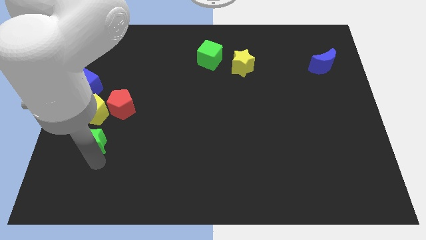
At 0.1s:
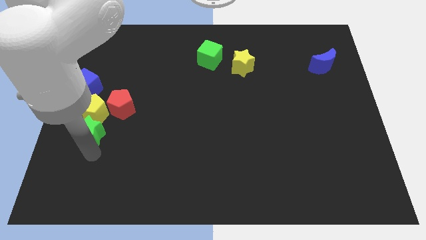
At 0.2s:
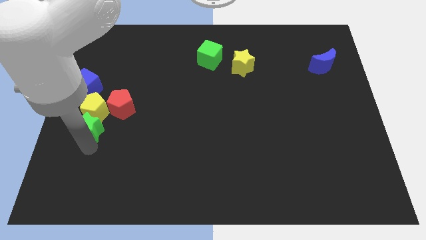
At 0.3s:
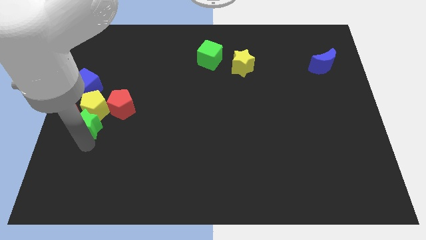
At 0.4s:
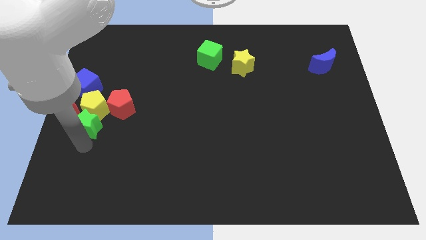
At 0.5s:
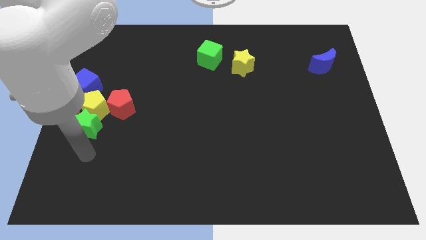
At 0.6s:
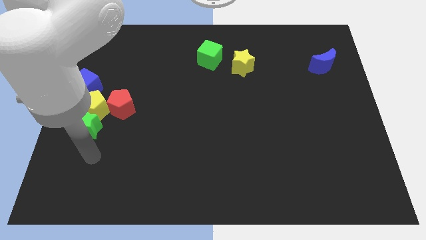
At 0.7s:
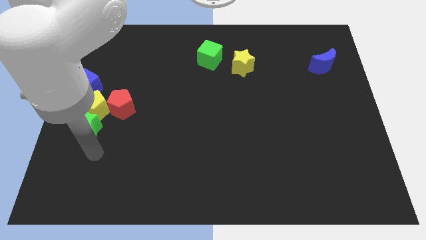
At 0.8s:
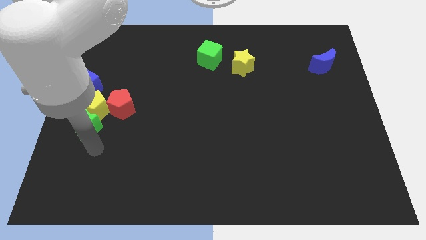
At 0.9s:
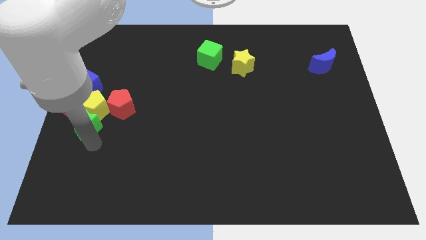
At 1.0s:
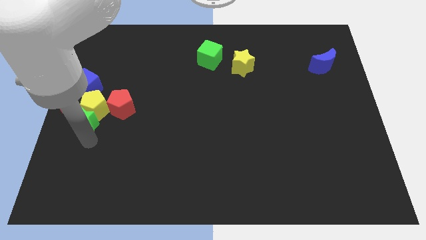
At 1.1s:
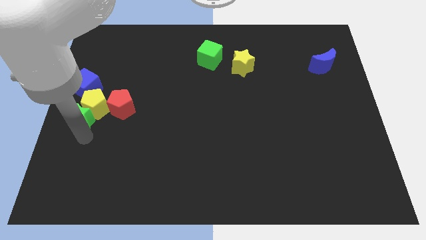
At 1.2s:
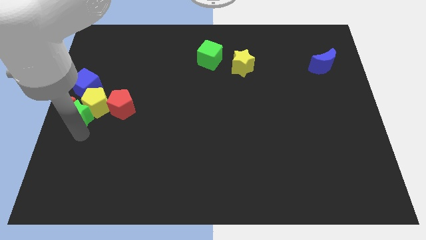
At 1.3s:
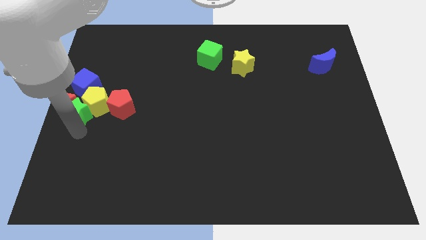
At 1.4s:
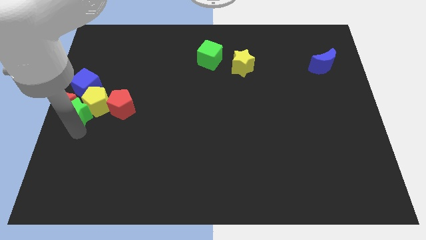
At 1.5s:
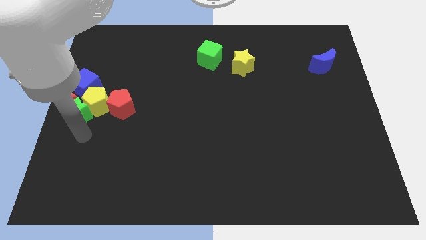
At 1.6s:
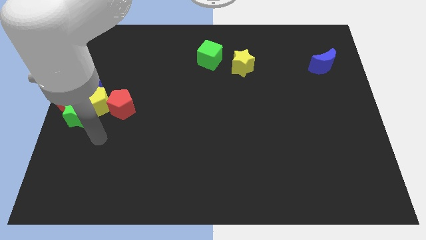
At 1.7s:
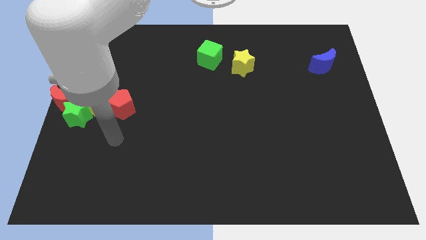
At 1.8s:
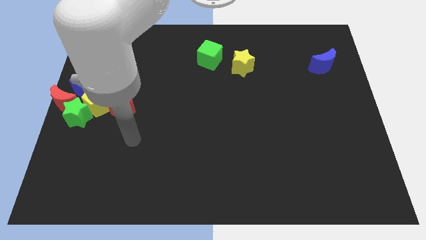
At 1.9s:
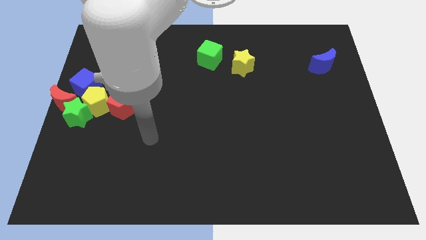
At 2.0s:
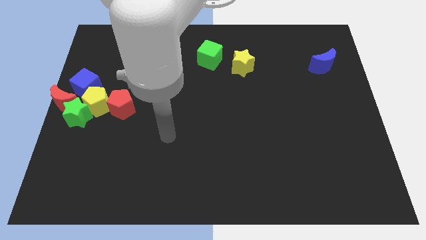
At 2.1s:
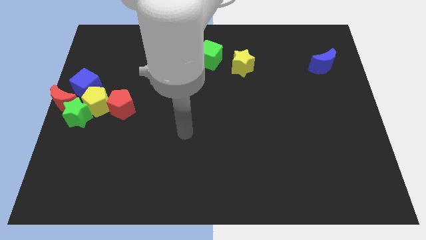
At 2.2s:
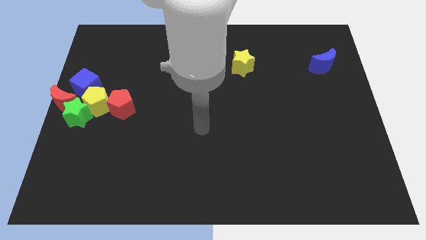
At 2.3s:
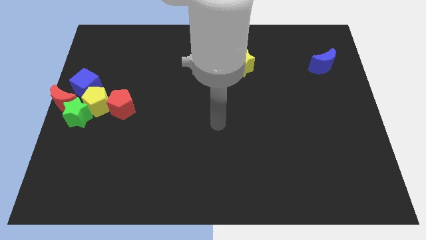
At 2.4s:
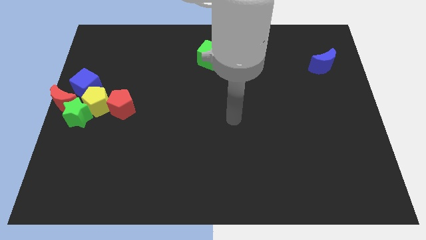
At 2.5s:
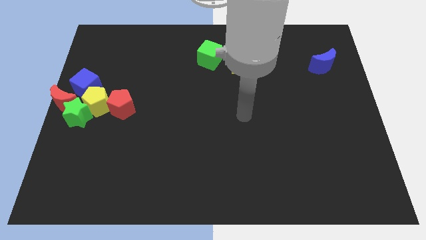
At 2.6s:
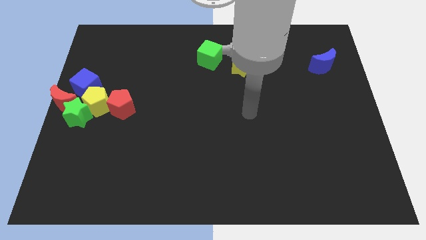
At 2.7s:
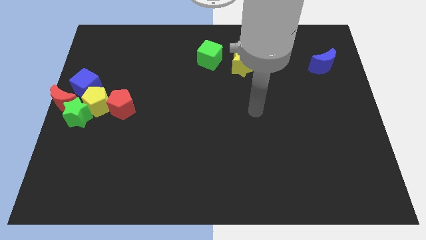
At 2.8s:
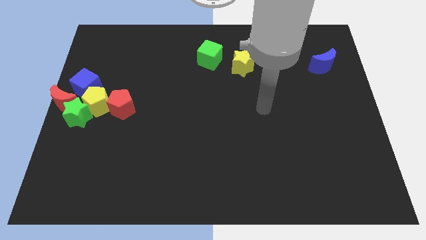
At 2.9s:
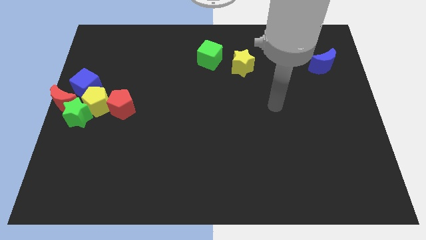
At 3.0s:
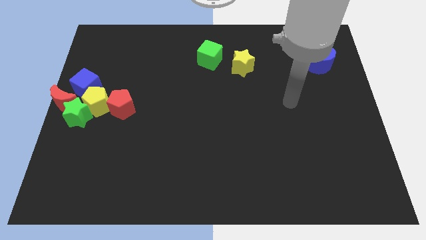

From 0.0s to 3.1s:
push the green star into the group of blocks

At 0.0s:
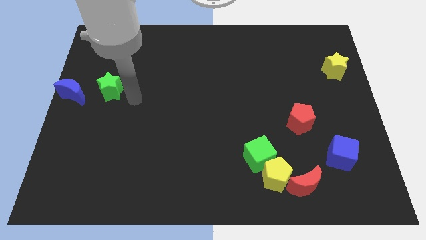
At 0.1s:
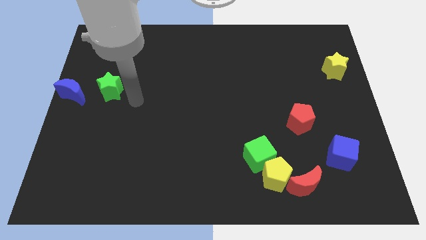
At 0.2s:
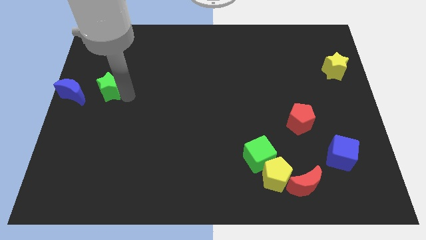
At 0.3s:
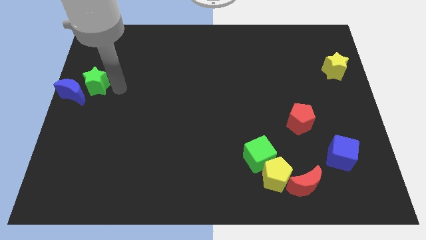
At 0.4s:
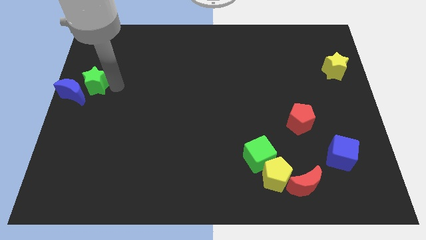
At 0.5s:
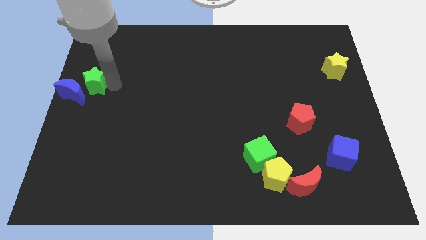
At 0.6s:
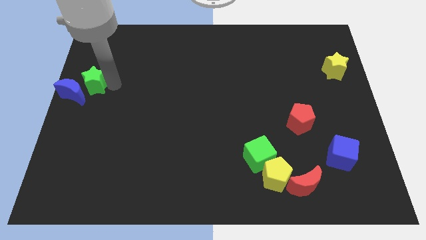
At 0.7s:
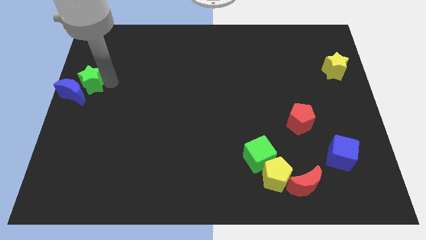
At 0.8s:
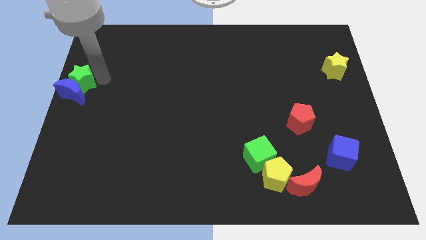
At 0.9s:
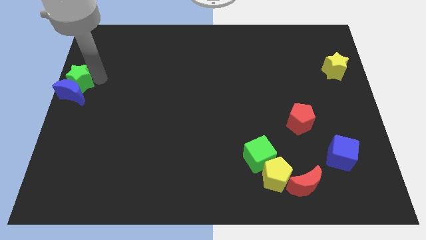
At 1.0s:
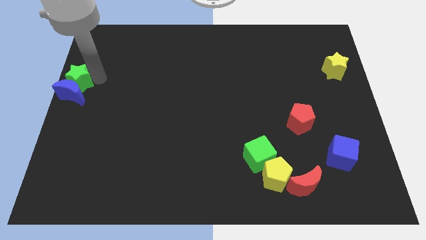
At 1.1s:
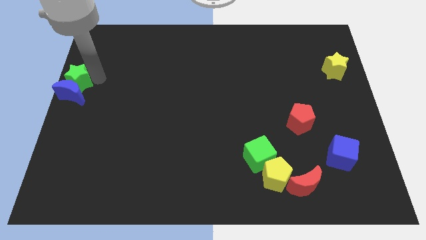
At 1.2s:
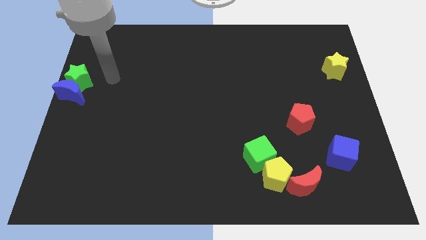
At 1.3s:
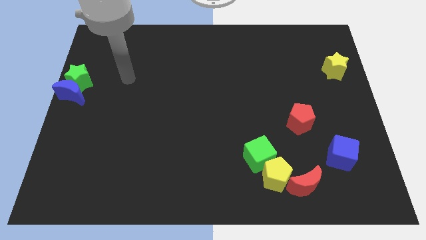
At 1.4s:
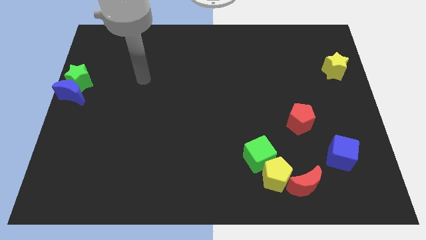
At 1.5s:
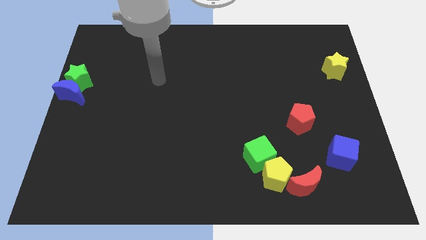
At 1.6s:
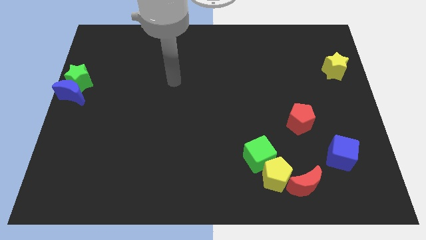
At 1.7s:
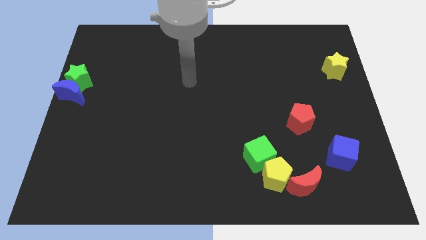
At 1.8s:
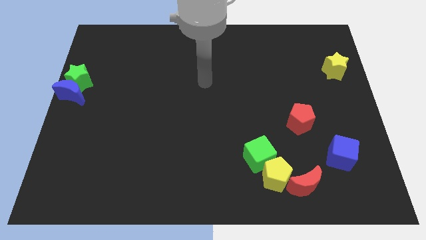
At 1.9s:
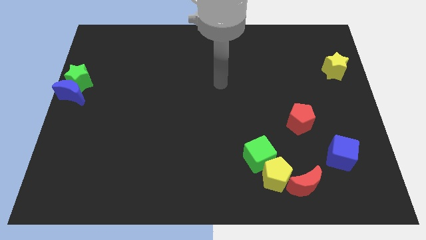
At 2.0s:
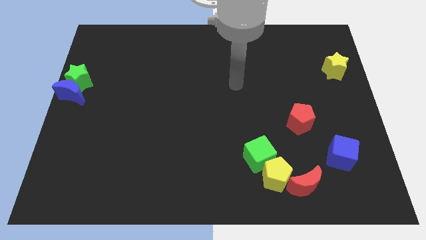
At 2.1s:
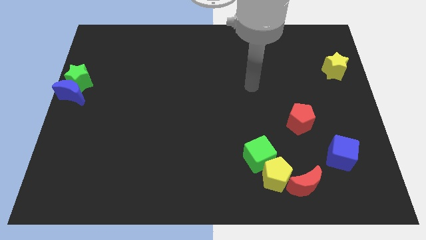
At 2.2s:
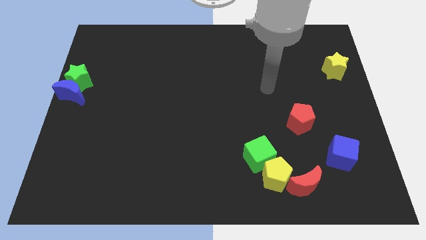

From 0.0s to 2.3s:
drag the green star to center left of the board

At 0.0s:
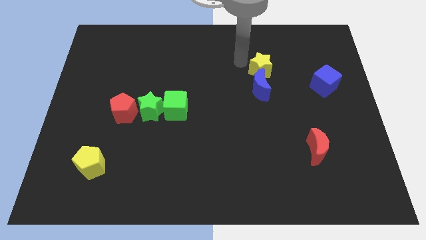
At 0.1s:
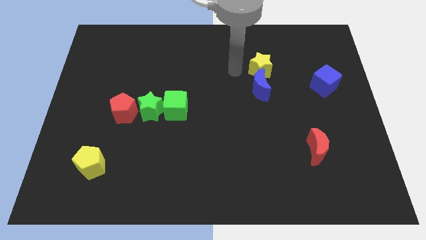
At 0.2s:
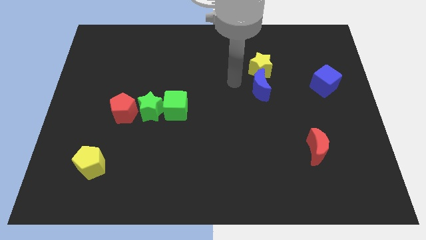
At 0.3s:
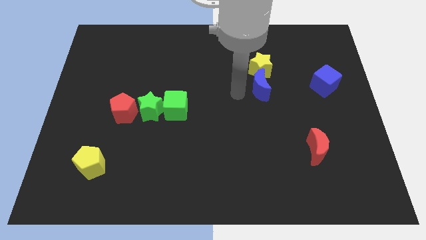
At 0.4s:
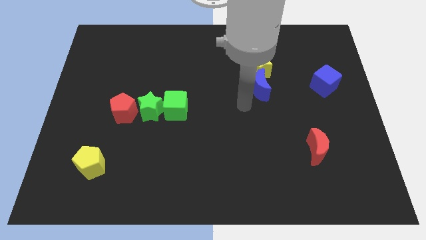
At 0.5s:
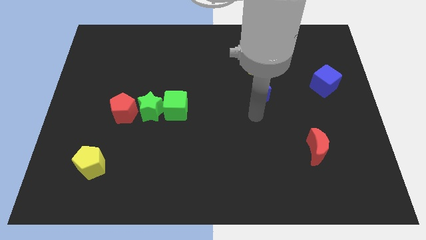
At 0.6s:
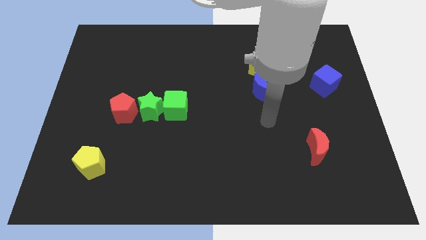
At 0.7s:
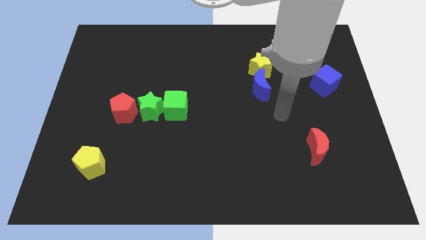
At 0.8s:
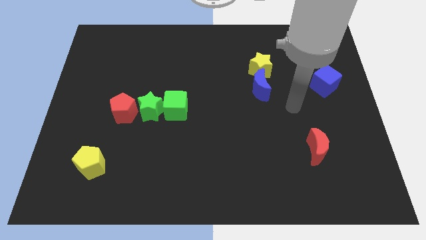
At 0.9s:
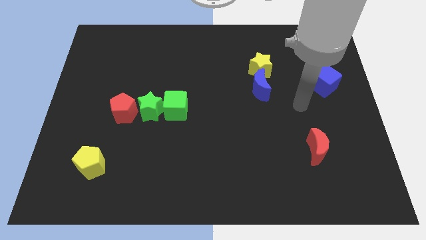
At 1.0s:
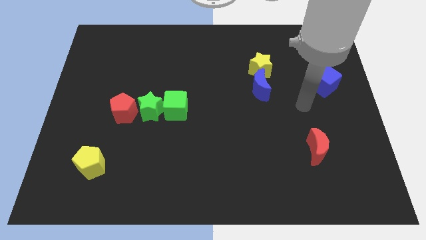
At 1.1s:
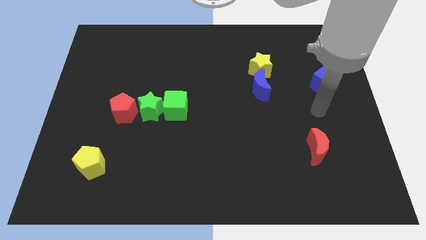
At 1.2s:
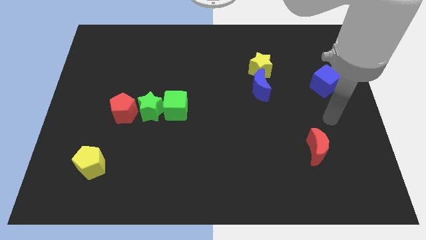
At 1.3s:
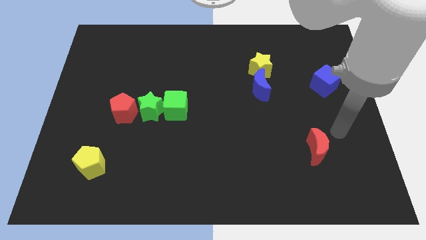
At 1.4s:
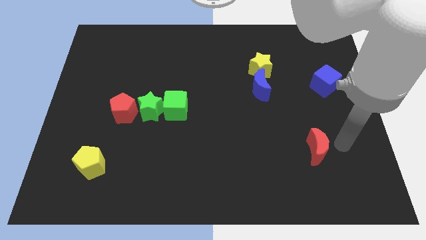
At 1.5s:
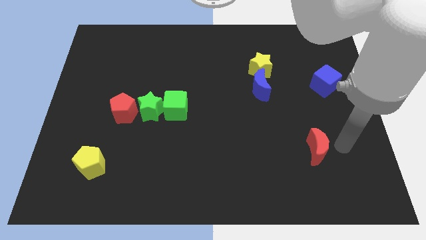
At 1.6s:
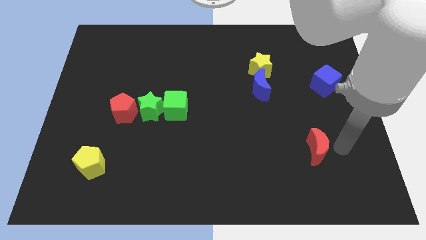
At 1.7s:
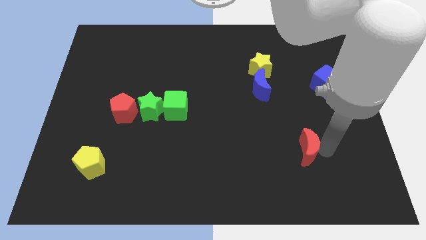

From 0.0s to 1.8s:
move your arm into the red crescent

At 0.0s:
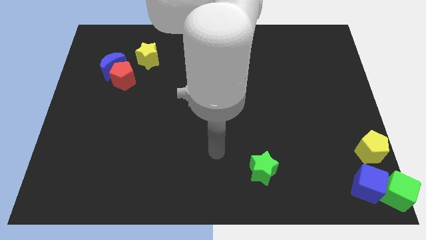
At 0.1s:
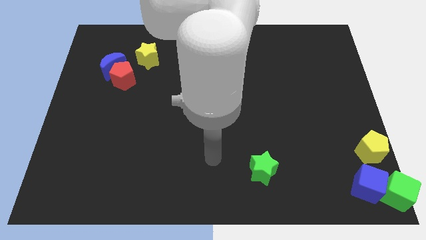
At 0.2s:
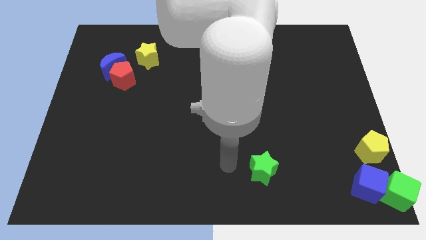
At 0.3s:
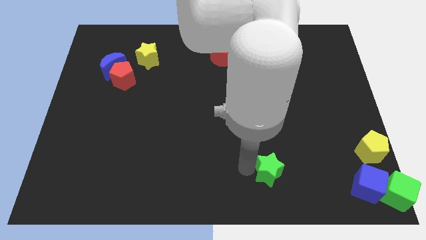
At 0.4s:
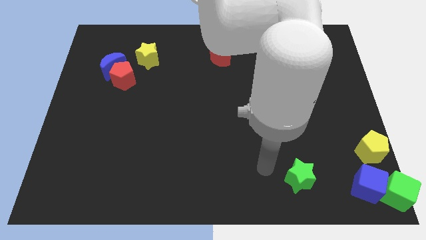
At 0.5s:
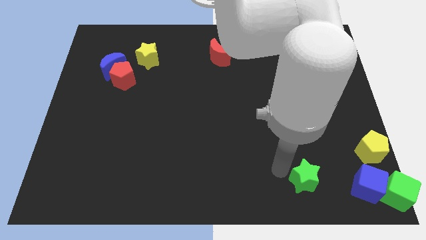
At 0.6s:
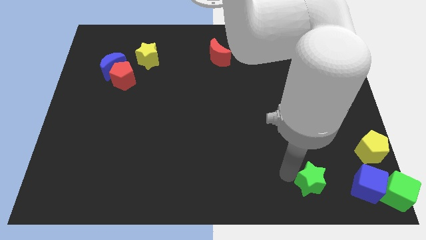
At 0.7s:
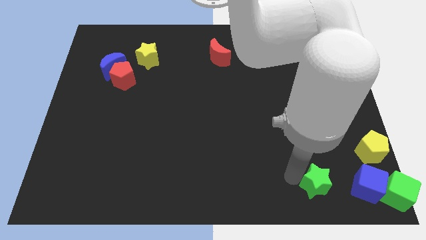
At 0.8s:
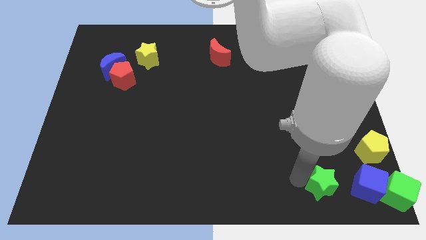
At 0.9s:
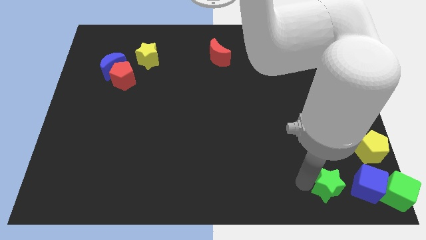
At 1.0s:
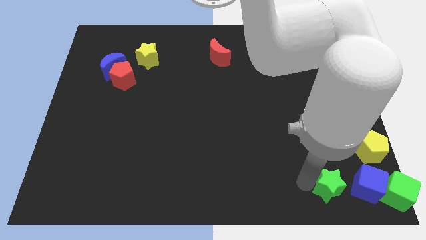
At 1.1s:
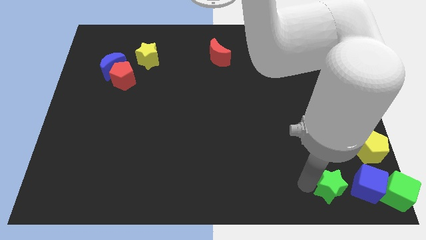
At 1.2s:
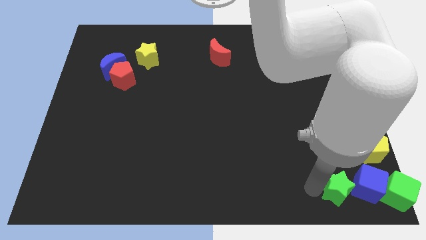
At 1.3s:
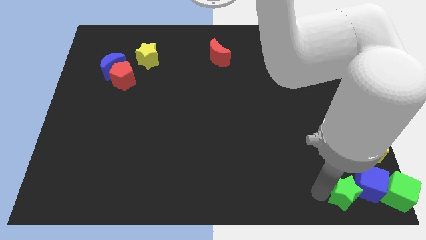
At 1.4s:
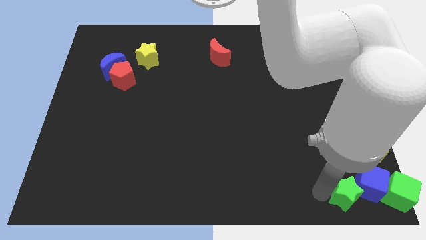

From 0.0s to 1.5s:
push the green star into the blue cube

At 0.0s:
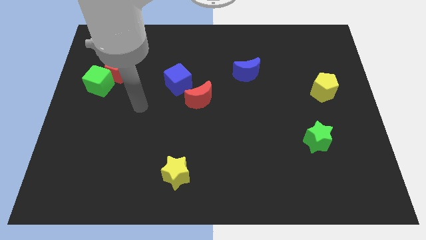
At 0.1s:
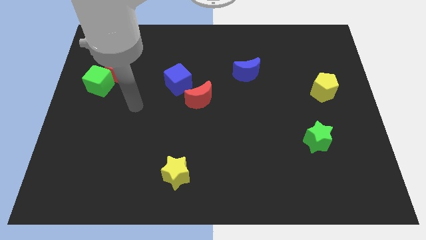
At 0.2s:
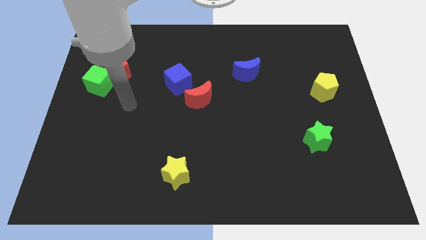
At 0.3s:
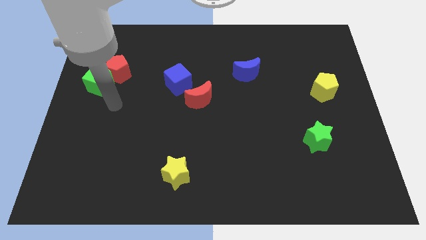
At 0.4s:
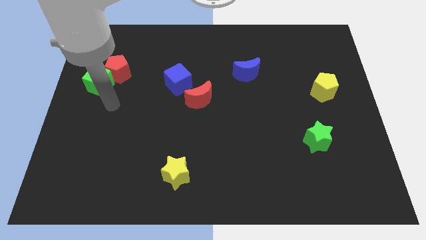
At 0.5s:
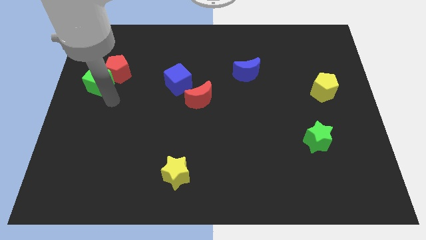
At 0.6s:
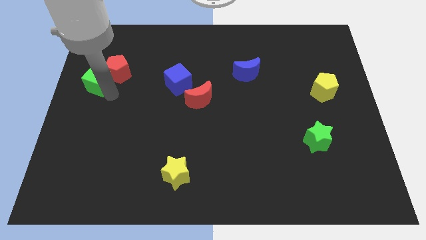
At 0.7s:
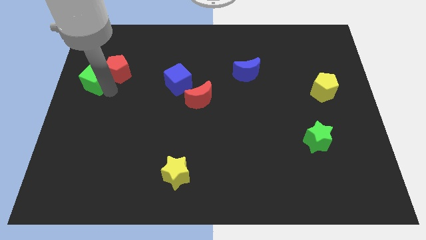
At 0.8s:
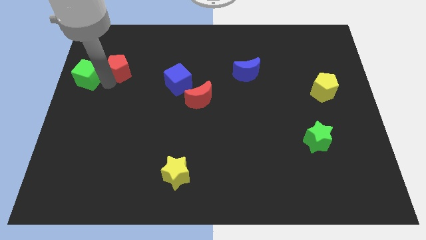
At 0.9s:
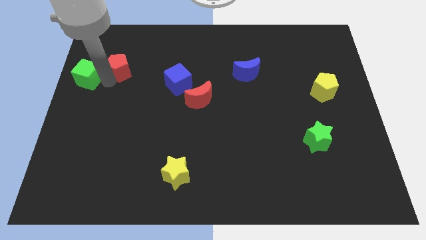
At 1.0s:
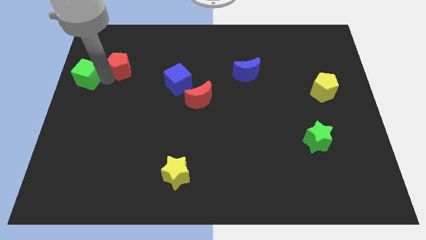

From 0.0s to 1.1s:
move your arm in between the green cube and the red pentagon
